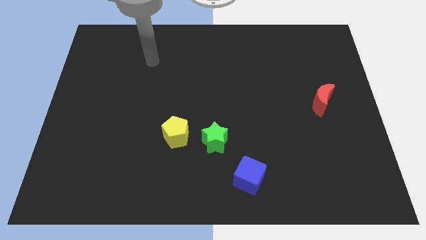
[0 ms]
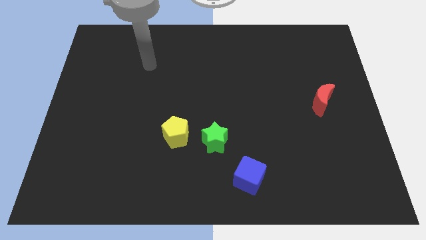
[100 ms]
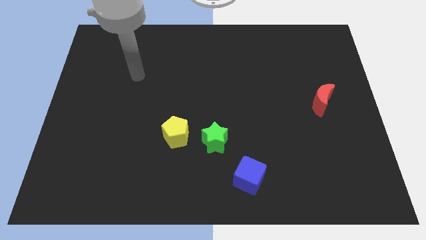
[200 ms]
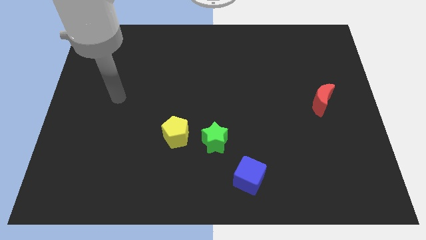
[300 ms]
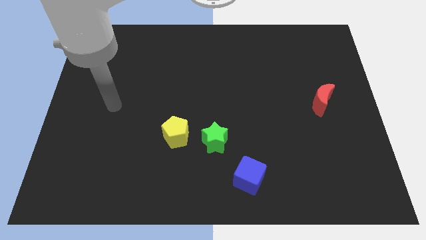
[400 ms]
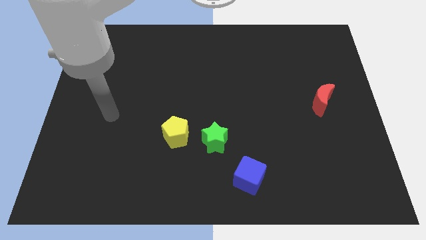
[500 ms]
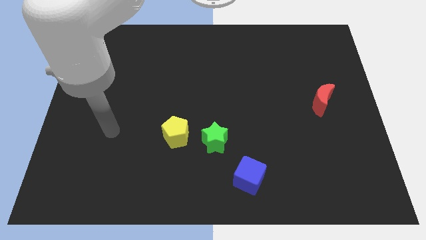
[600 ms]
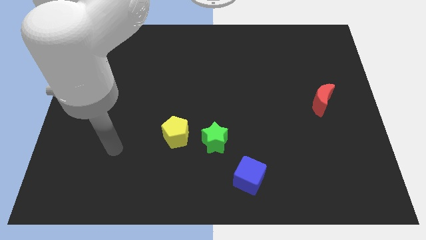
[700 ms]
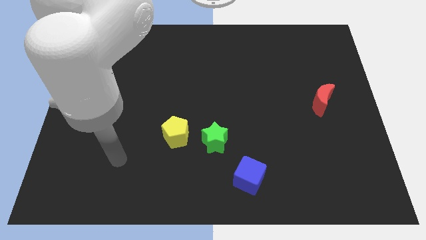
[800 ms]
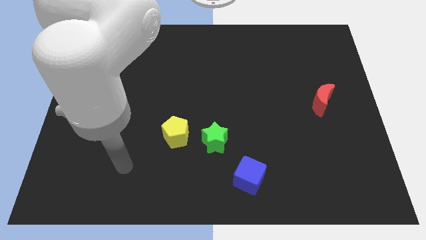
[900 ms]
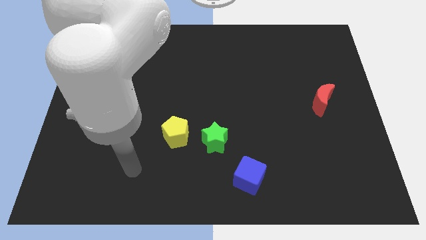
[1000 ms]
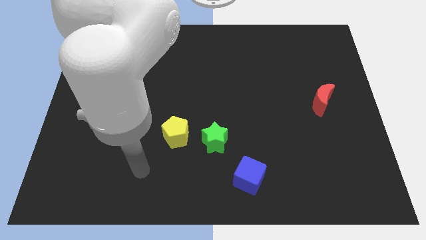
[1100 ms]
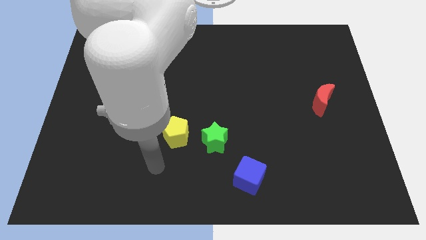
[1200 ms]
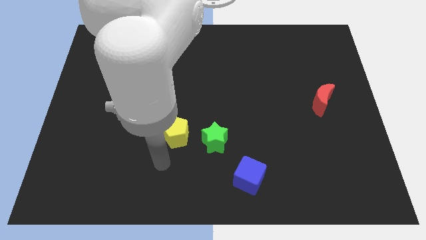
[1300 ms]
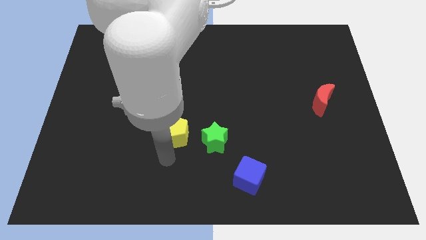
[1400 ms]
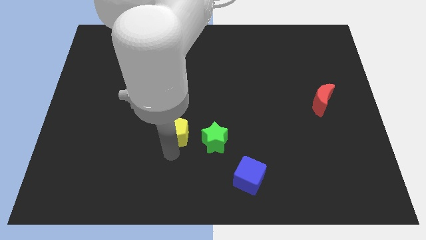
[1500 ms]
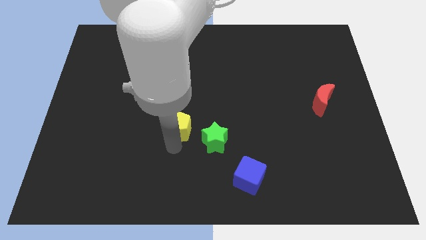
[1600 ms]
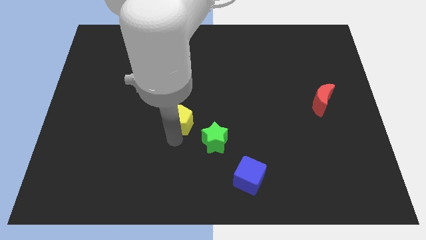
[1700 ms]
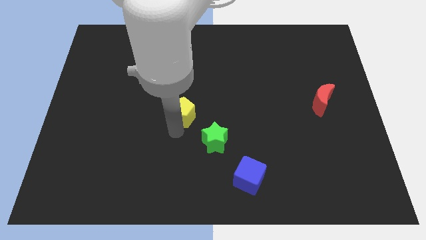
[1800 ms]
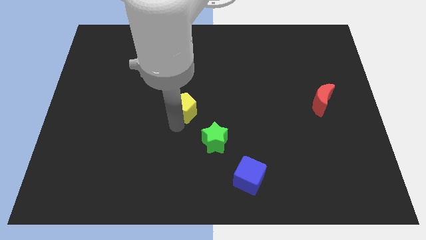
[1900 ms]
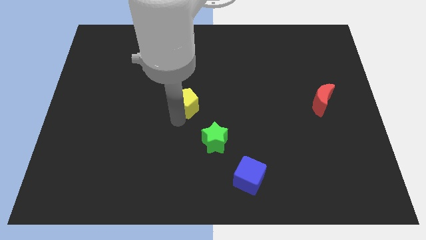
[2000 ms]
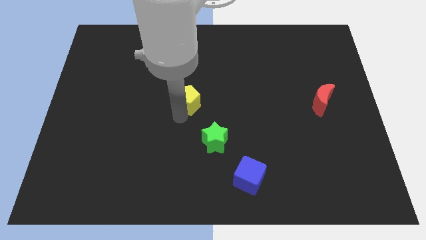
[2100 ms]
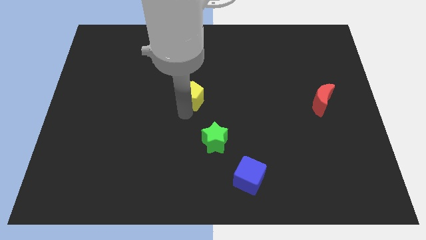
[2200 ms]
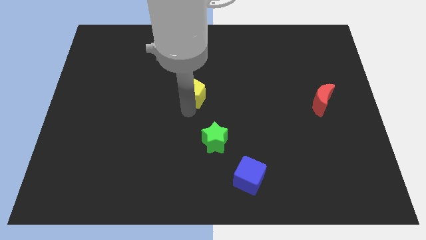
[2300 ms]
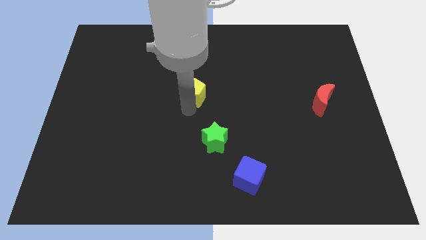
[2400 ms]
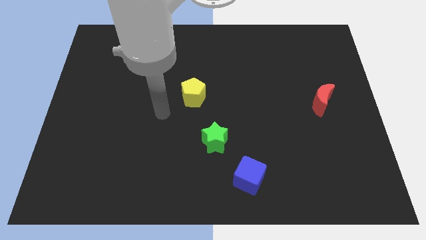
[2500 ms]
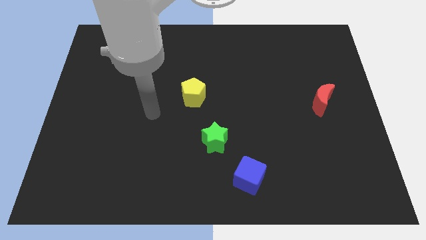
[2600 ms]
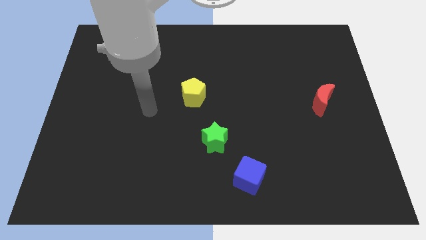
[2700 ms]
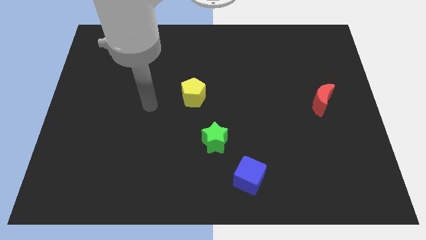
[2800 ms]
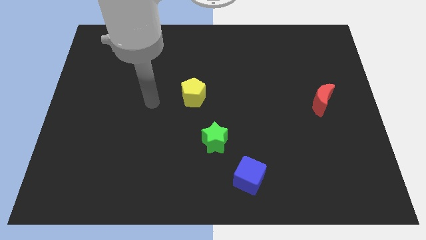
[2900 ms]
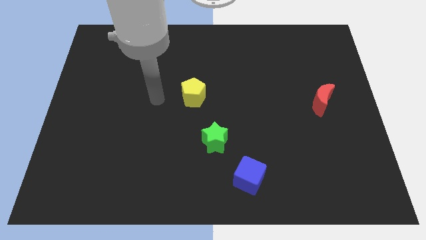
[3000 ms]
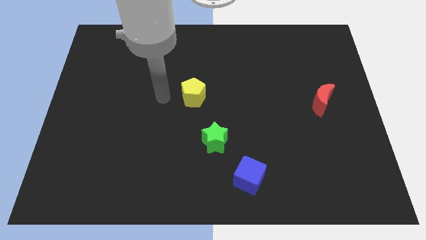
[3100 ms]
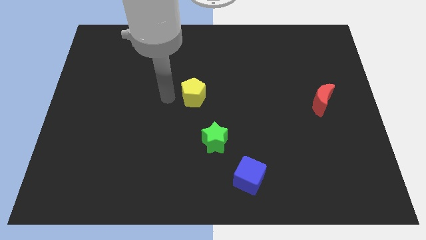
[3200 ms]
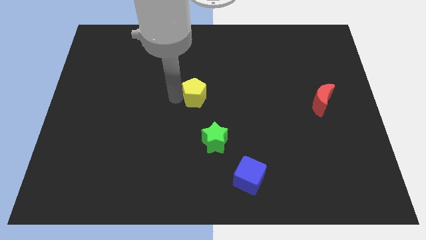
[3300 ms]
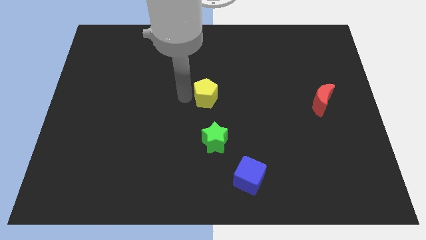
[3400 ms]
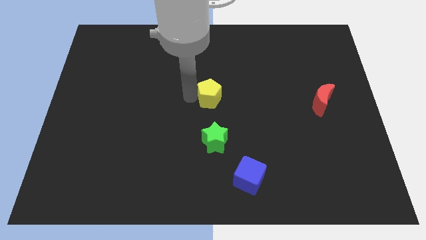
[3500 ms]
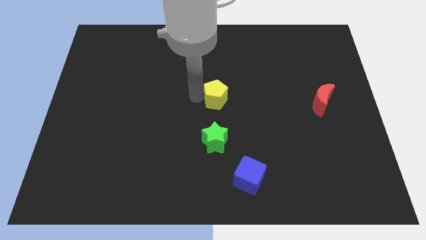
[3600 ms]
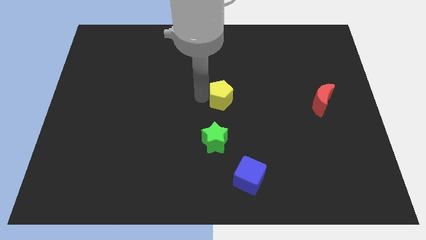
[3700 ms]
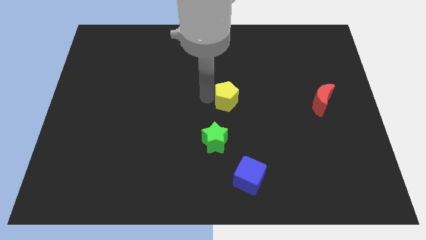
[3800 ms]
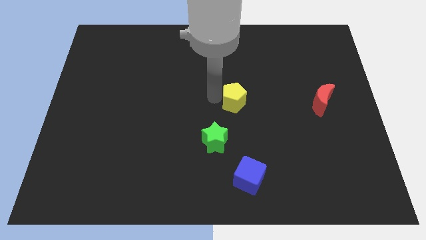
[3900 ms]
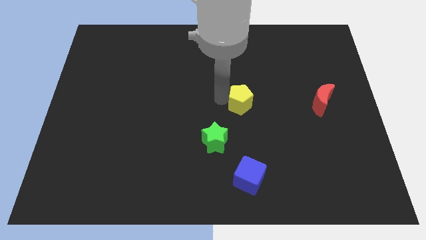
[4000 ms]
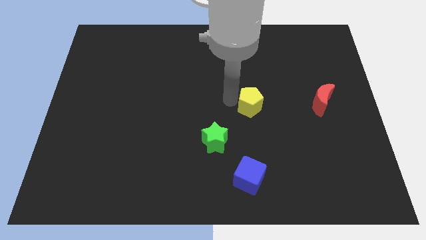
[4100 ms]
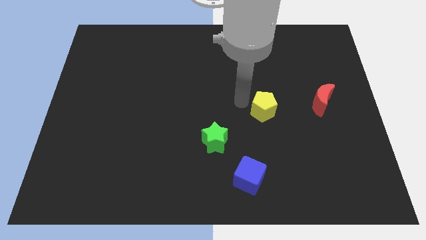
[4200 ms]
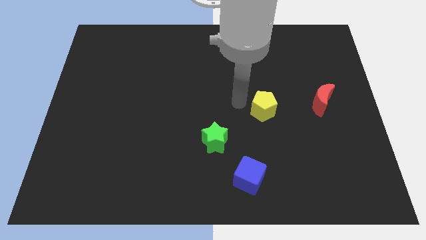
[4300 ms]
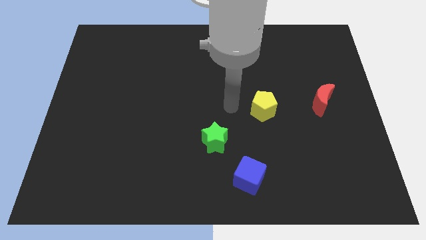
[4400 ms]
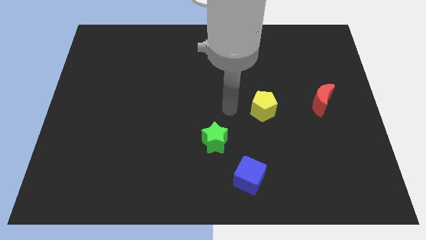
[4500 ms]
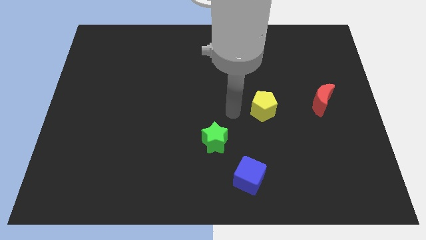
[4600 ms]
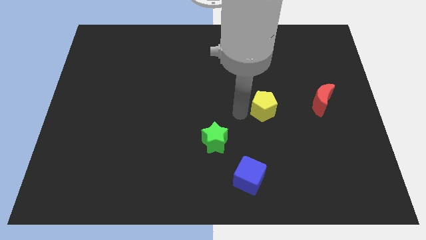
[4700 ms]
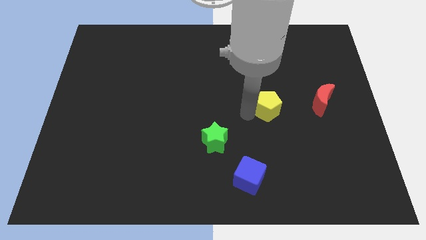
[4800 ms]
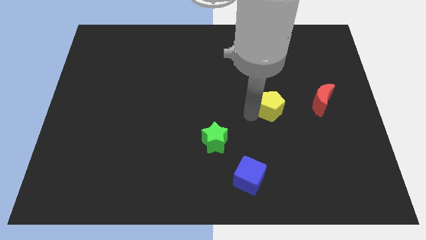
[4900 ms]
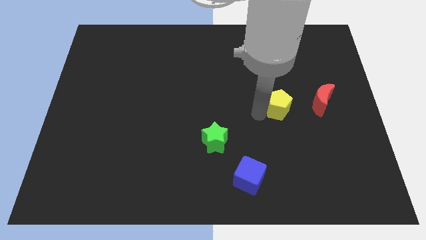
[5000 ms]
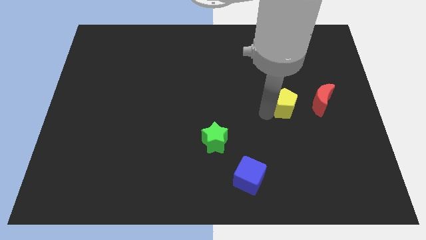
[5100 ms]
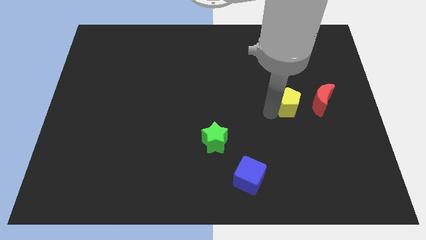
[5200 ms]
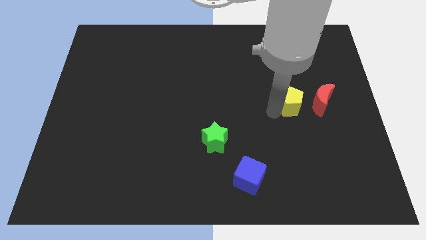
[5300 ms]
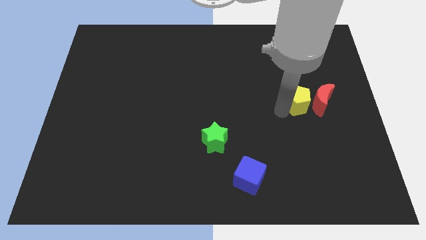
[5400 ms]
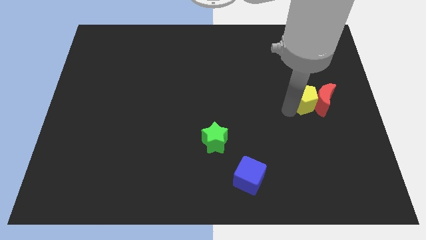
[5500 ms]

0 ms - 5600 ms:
put the yellow pentagon to the red block

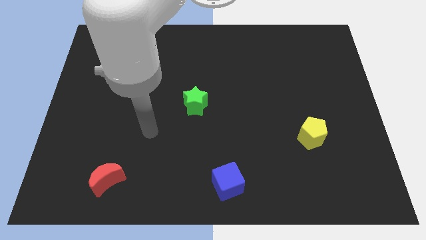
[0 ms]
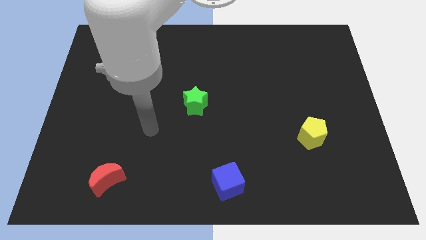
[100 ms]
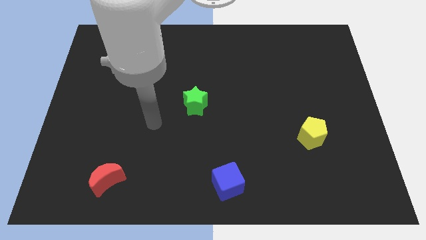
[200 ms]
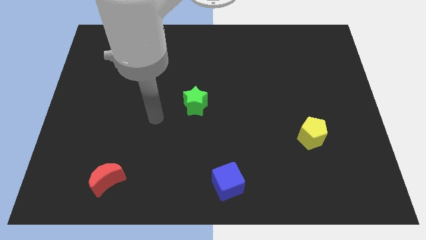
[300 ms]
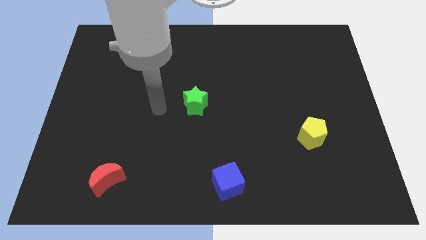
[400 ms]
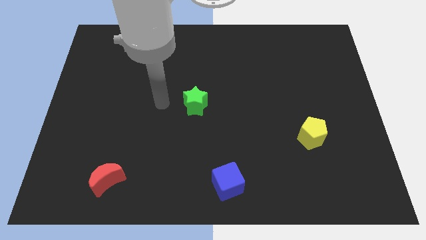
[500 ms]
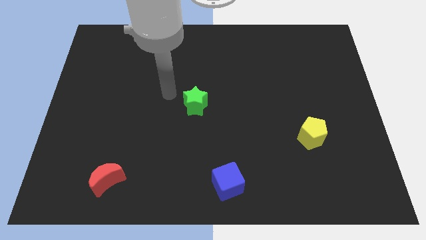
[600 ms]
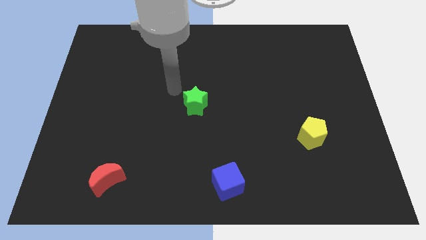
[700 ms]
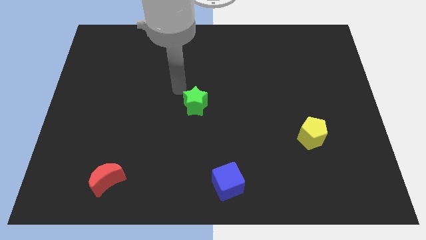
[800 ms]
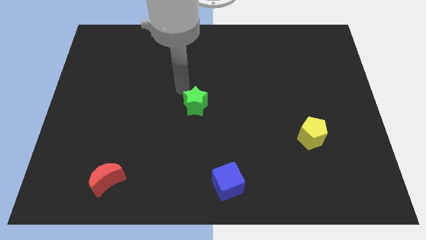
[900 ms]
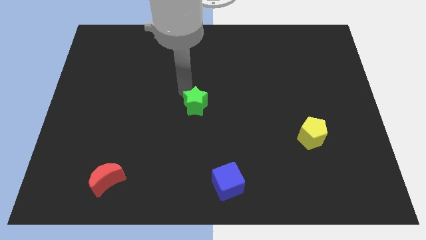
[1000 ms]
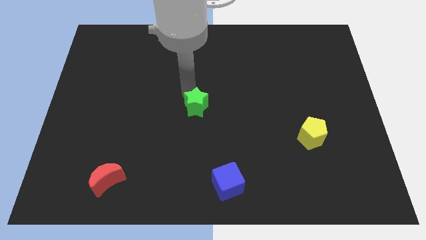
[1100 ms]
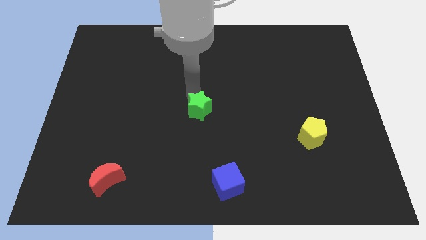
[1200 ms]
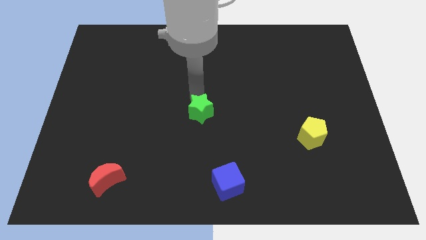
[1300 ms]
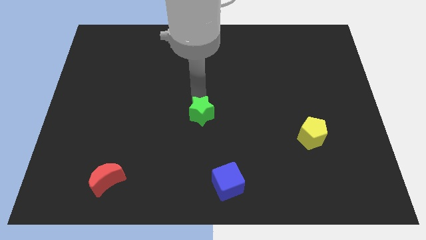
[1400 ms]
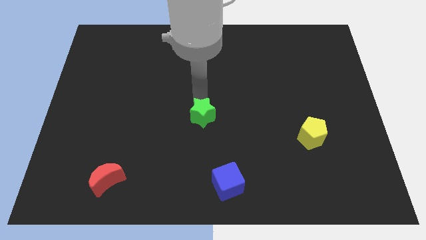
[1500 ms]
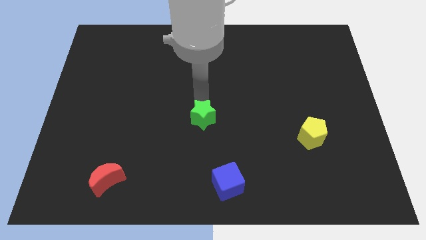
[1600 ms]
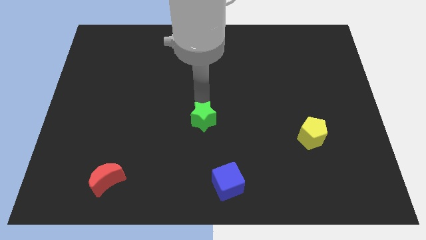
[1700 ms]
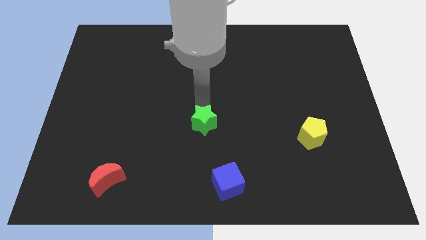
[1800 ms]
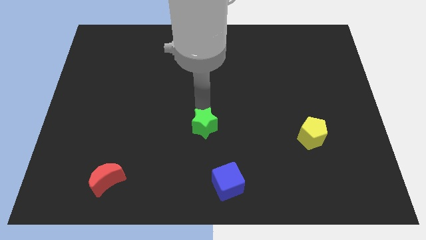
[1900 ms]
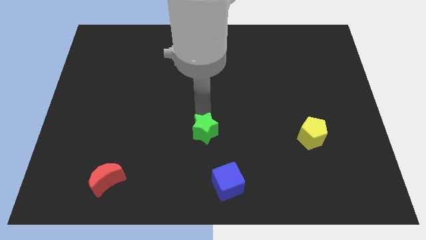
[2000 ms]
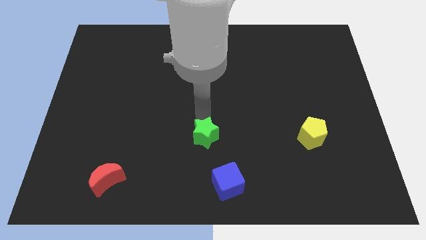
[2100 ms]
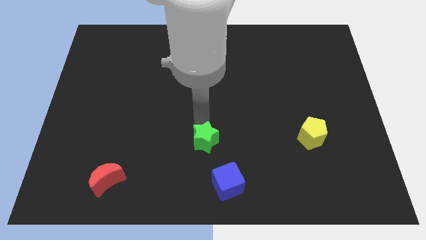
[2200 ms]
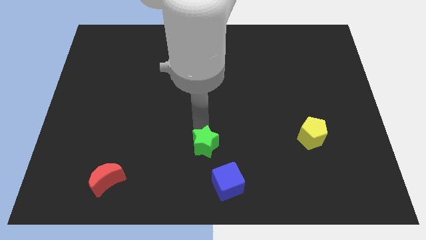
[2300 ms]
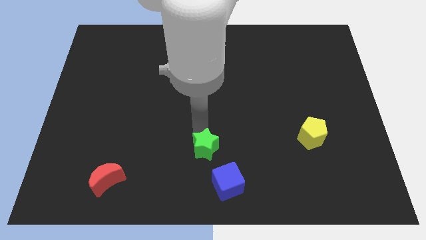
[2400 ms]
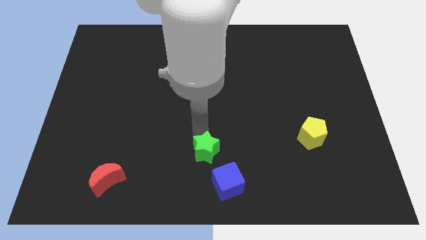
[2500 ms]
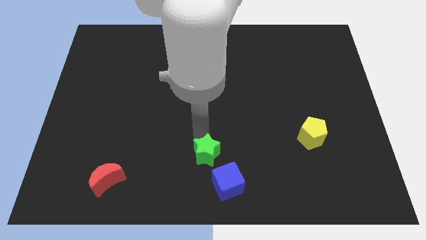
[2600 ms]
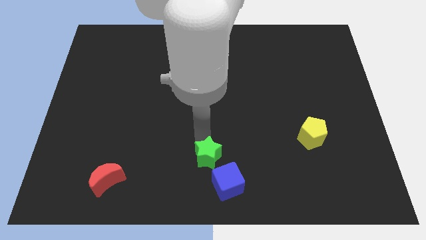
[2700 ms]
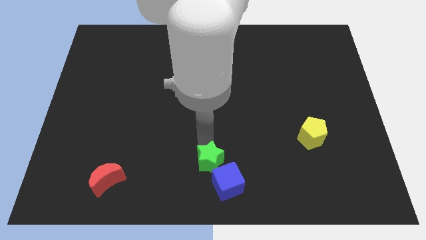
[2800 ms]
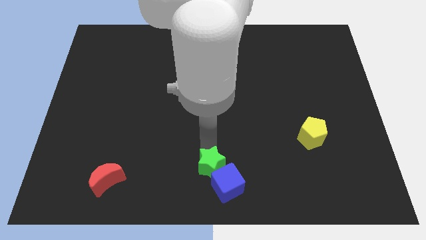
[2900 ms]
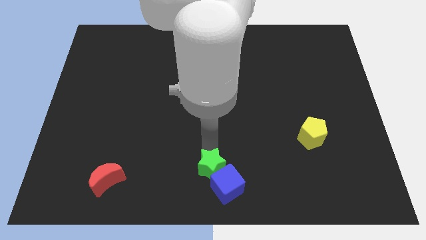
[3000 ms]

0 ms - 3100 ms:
move the green block next to the blue block
